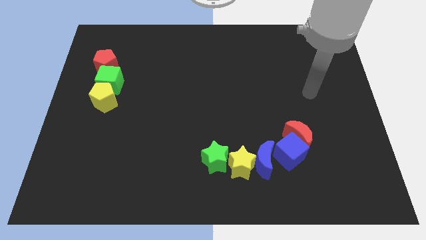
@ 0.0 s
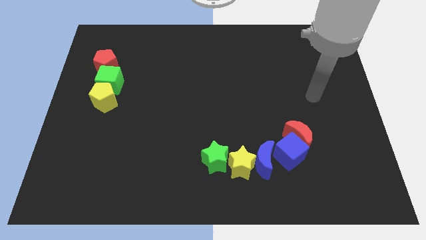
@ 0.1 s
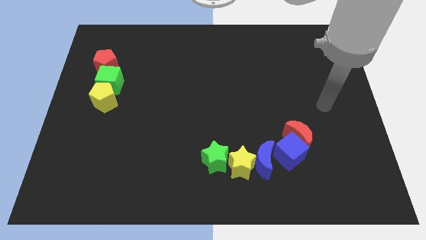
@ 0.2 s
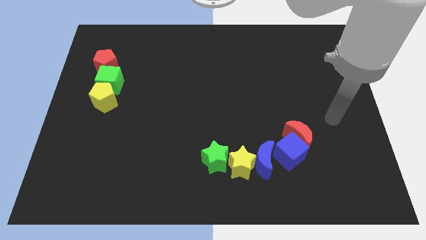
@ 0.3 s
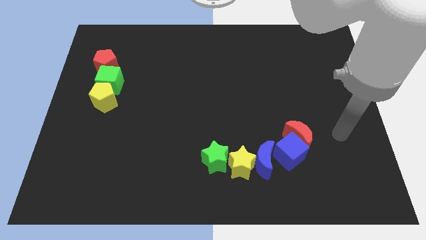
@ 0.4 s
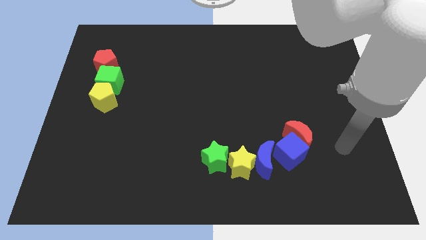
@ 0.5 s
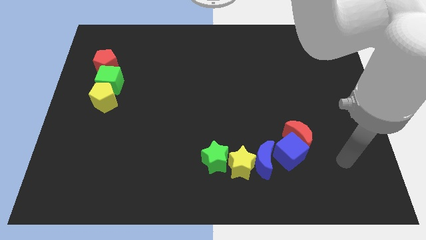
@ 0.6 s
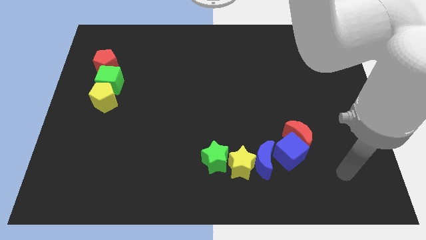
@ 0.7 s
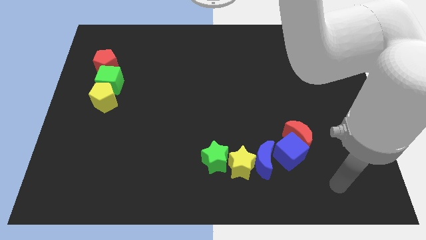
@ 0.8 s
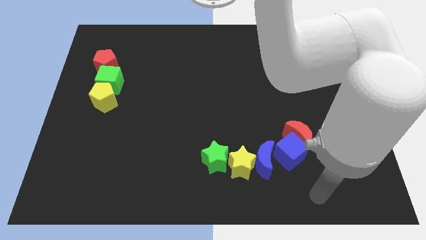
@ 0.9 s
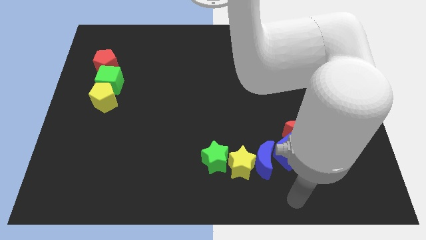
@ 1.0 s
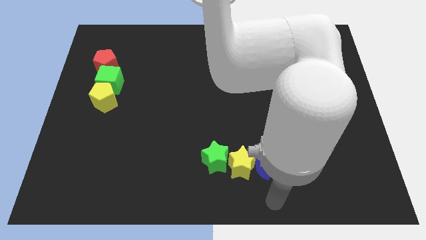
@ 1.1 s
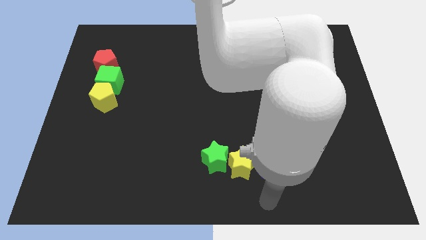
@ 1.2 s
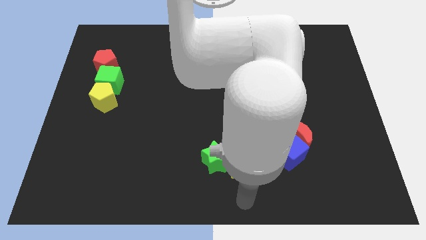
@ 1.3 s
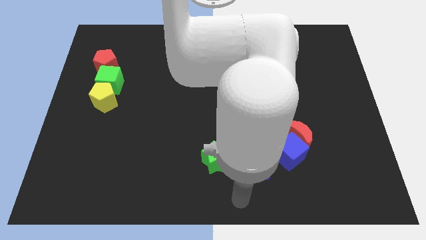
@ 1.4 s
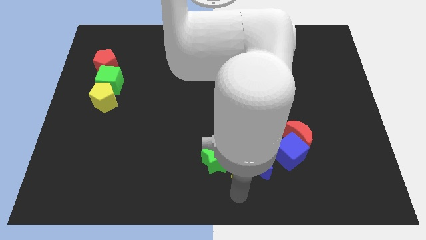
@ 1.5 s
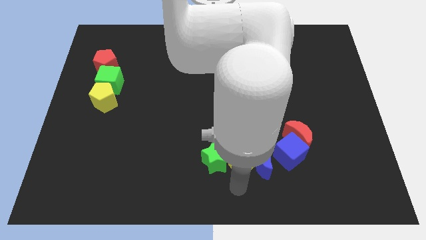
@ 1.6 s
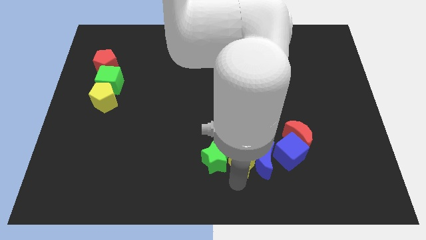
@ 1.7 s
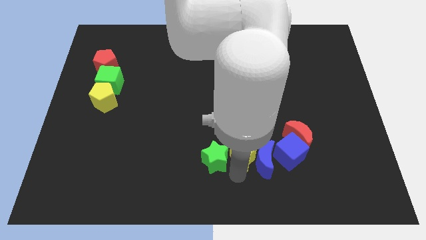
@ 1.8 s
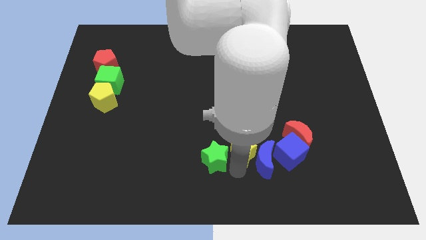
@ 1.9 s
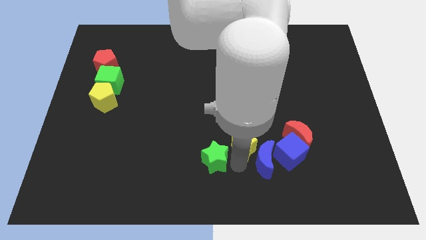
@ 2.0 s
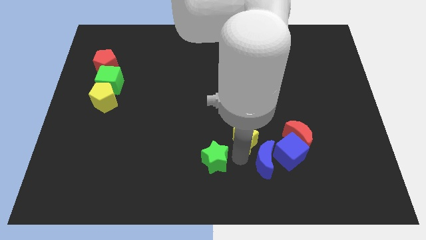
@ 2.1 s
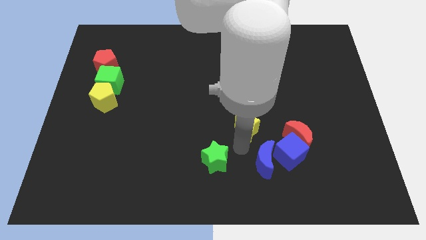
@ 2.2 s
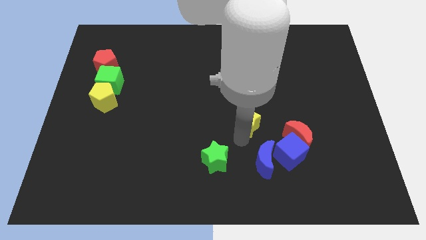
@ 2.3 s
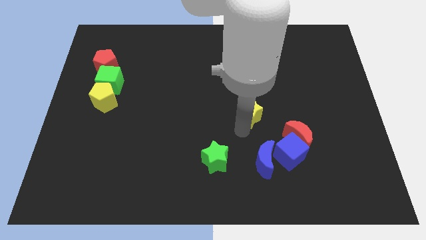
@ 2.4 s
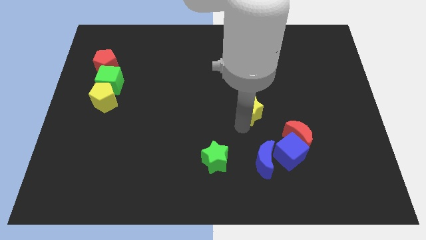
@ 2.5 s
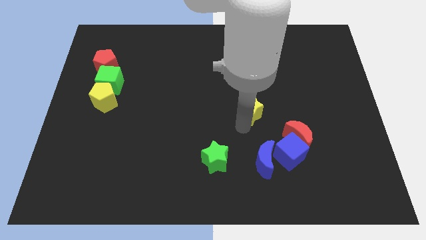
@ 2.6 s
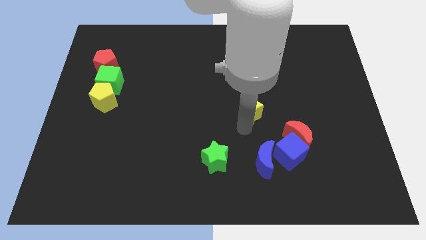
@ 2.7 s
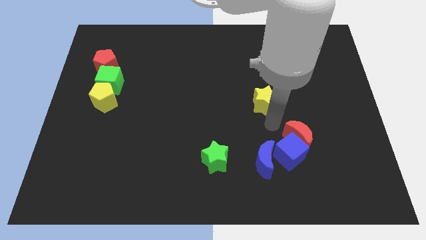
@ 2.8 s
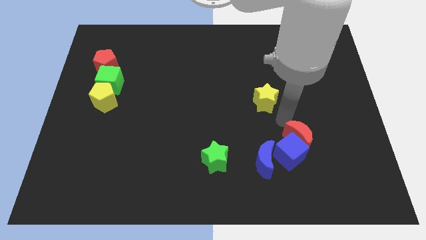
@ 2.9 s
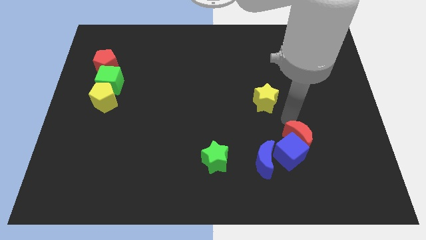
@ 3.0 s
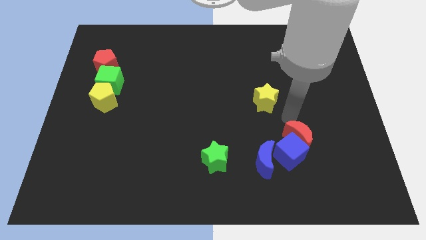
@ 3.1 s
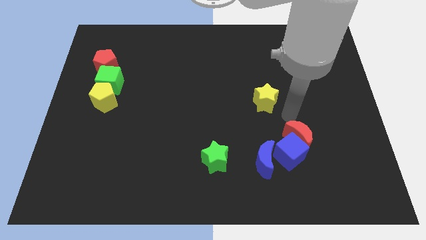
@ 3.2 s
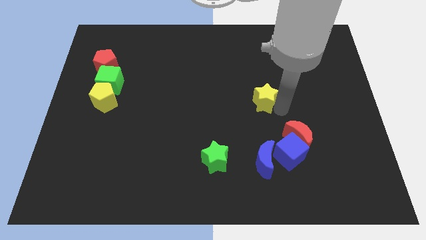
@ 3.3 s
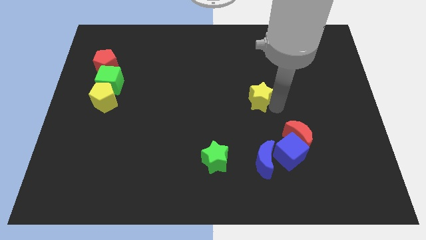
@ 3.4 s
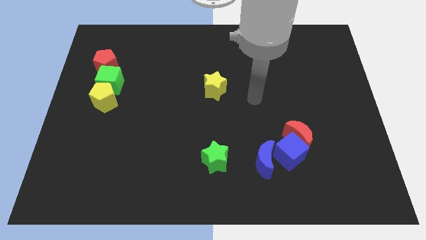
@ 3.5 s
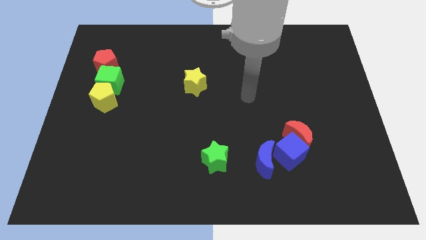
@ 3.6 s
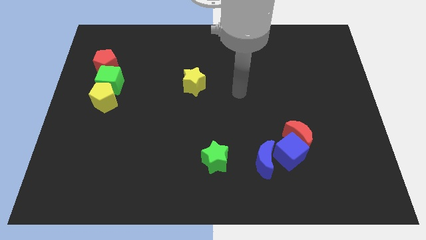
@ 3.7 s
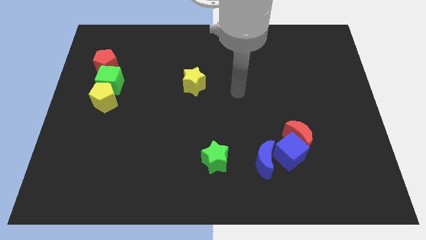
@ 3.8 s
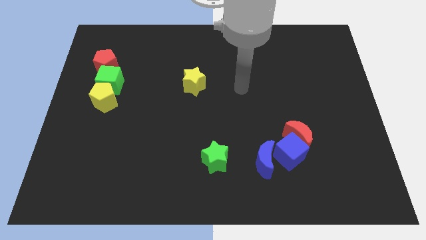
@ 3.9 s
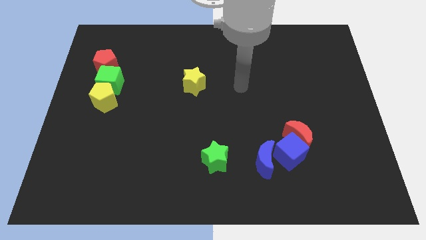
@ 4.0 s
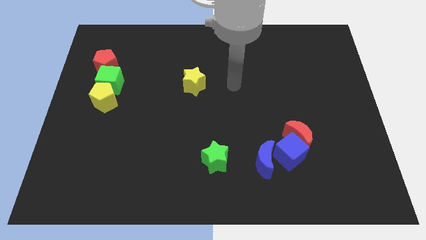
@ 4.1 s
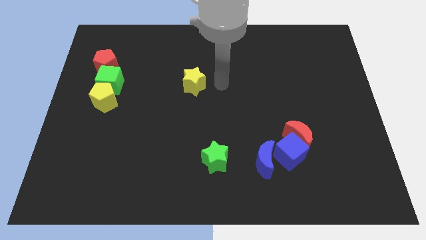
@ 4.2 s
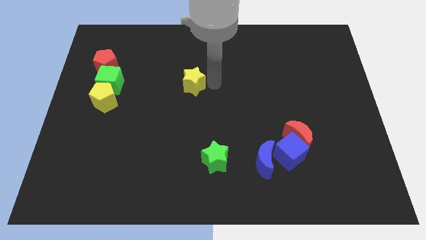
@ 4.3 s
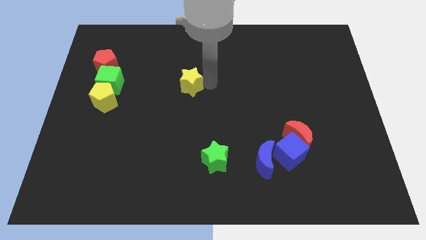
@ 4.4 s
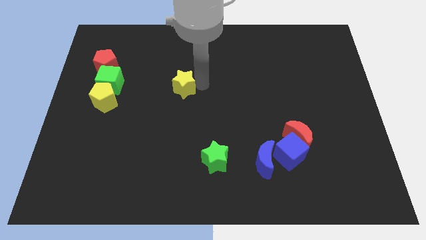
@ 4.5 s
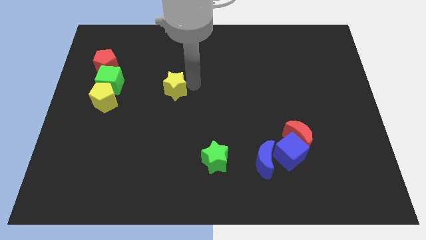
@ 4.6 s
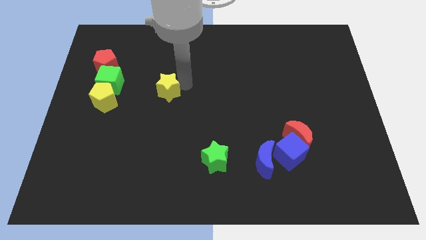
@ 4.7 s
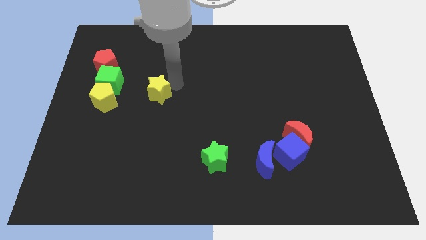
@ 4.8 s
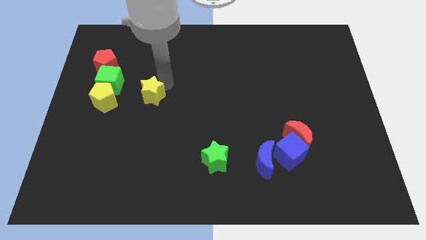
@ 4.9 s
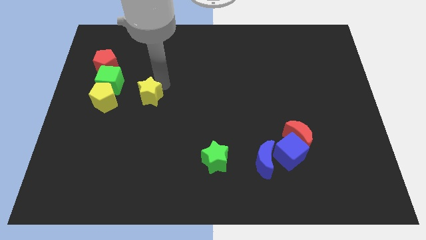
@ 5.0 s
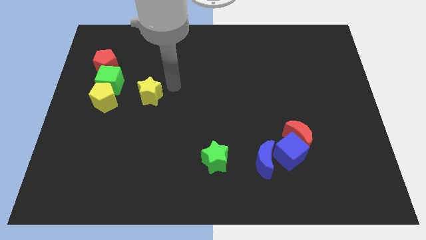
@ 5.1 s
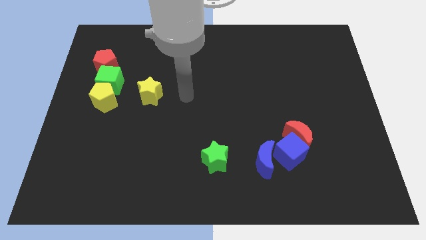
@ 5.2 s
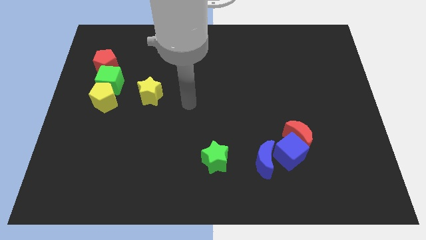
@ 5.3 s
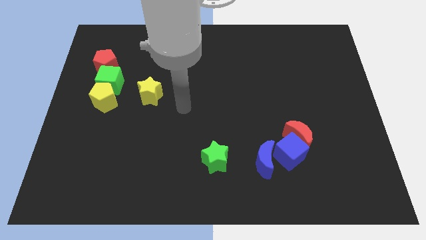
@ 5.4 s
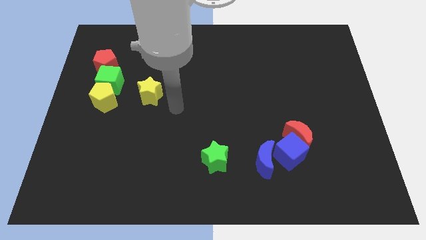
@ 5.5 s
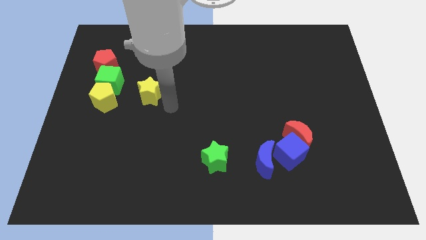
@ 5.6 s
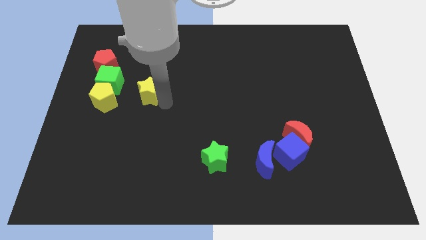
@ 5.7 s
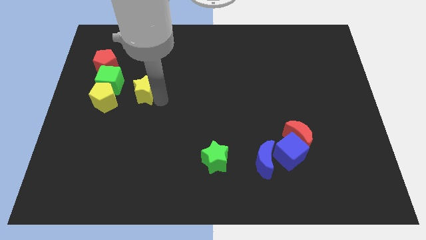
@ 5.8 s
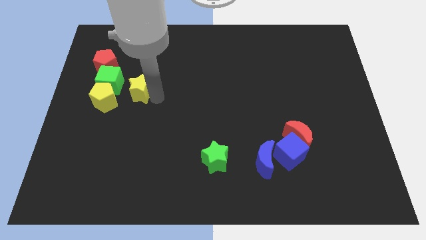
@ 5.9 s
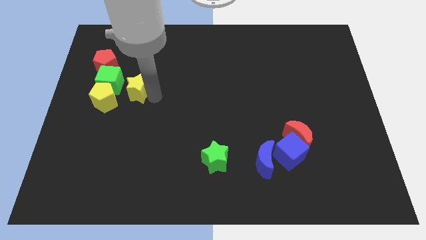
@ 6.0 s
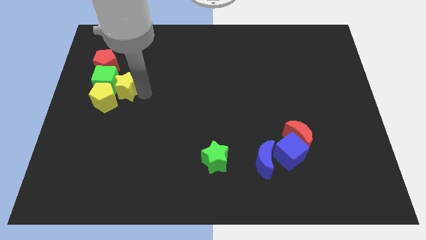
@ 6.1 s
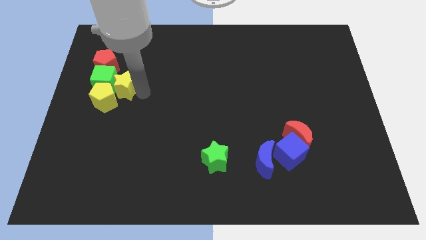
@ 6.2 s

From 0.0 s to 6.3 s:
slide the yellow star next to the green cube

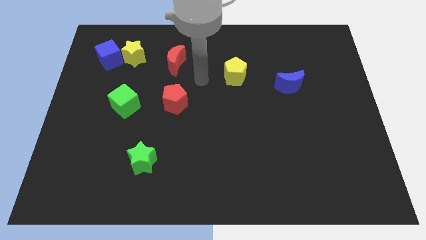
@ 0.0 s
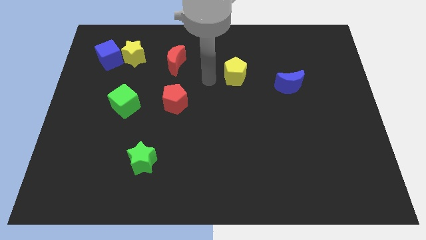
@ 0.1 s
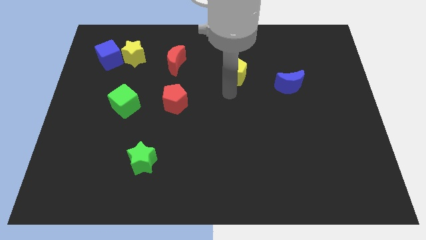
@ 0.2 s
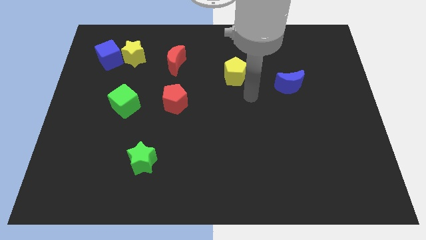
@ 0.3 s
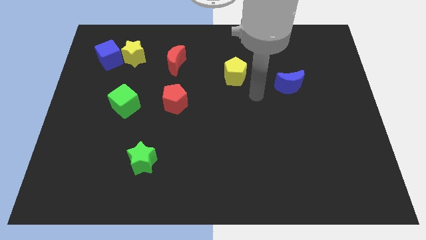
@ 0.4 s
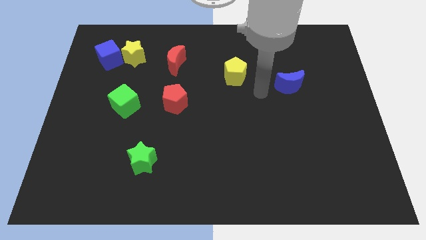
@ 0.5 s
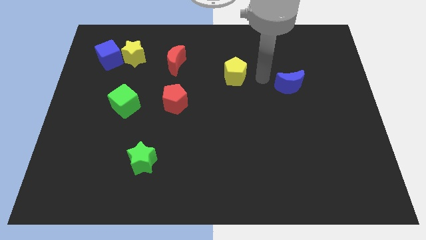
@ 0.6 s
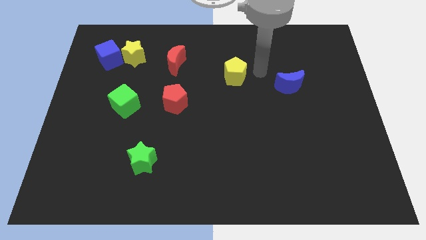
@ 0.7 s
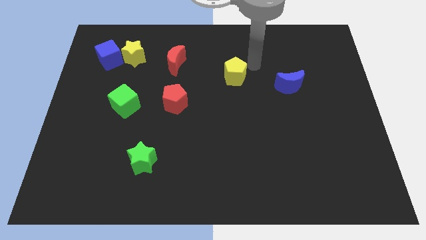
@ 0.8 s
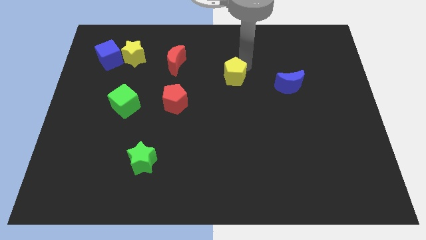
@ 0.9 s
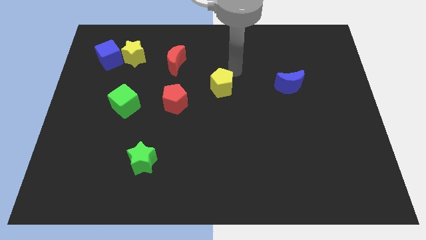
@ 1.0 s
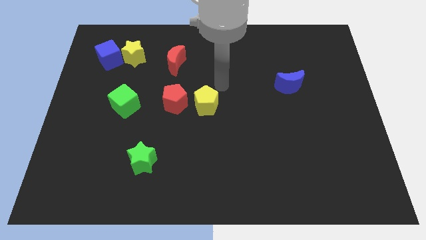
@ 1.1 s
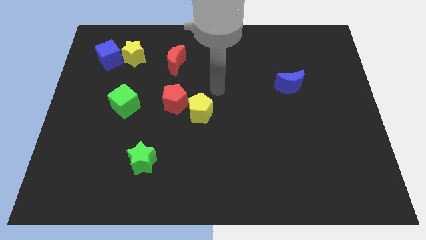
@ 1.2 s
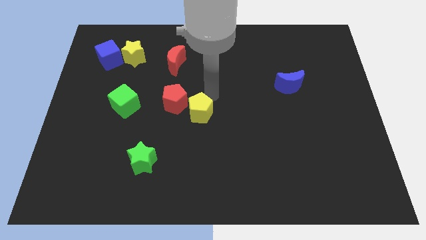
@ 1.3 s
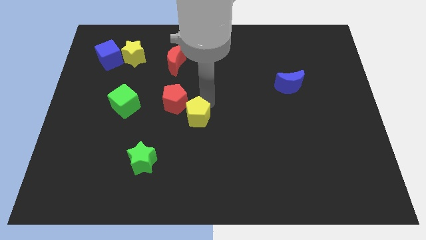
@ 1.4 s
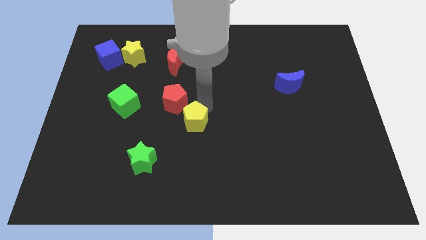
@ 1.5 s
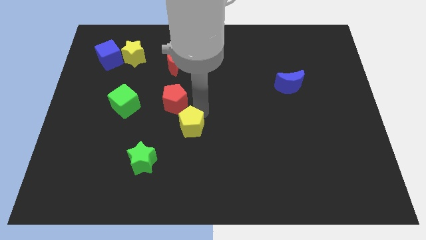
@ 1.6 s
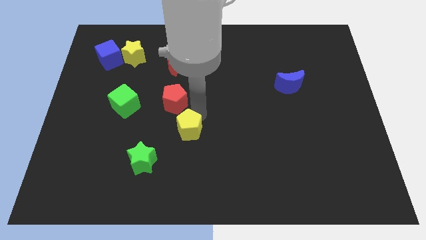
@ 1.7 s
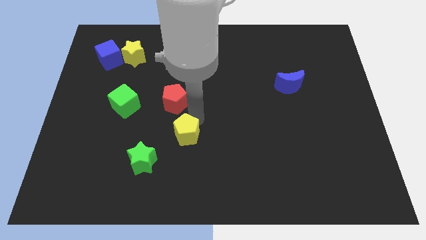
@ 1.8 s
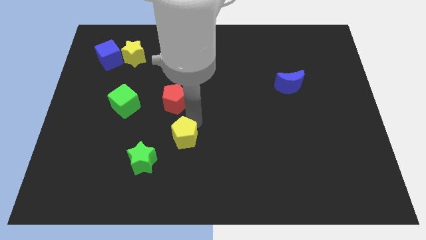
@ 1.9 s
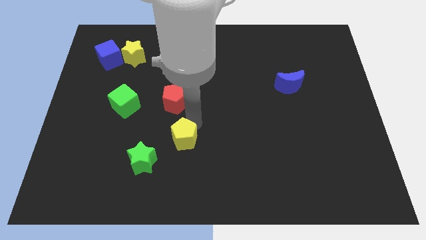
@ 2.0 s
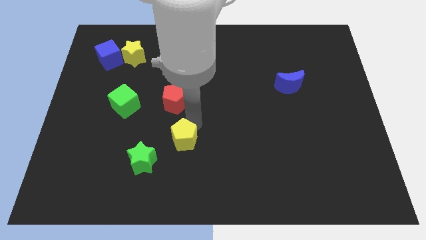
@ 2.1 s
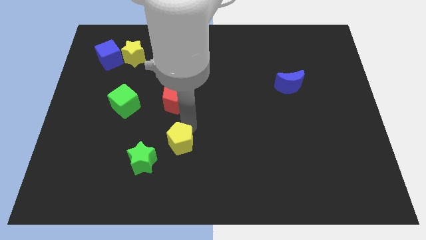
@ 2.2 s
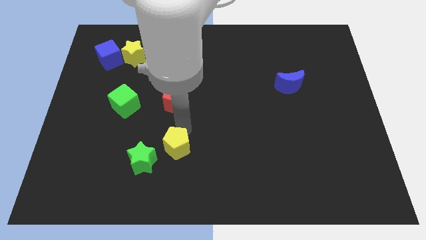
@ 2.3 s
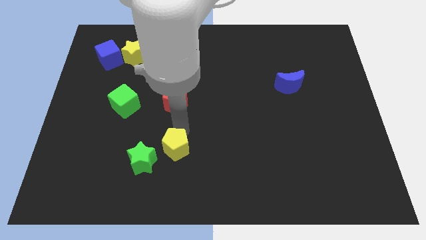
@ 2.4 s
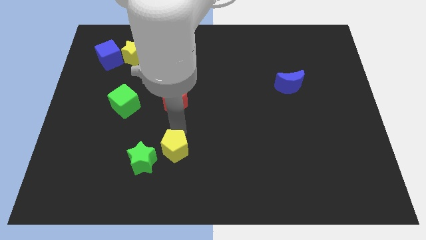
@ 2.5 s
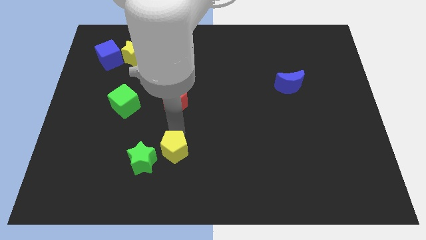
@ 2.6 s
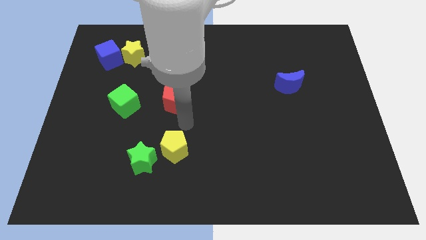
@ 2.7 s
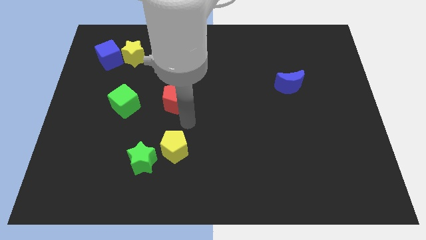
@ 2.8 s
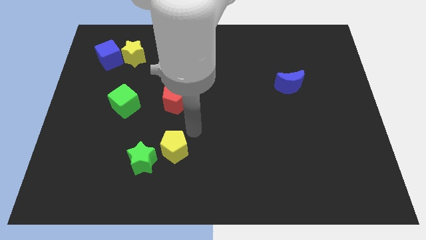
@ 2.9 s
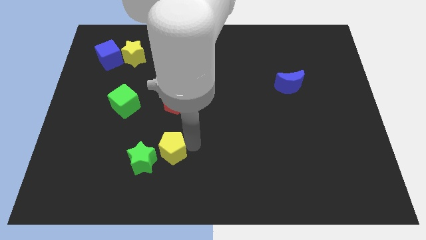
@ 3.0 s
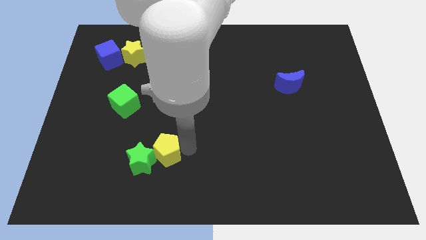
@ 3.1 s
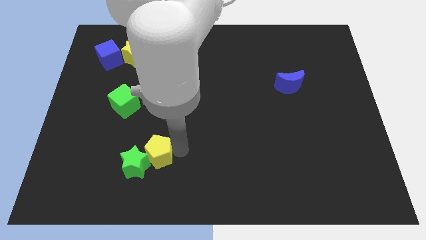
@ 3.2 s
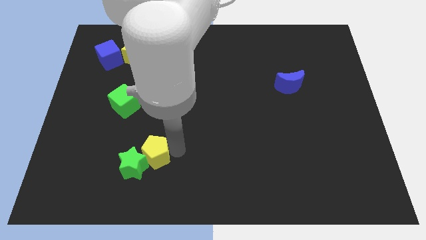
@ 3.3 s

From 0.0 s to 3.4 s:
slide the yellow pentagon close to the green star
